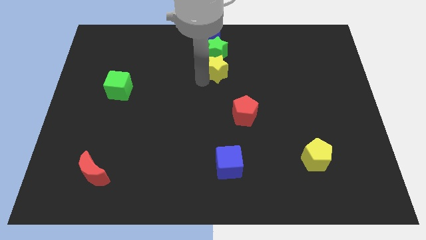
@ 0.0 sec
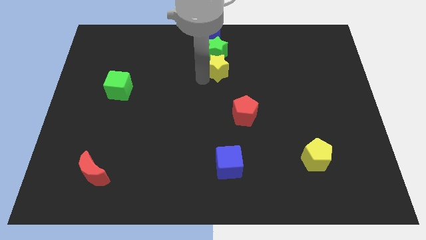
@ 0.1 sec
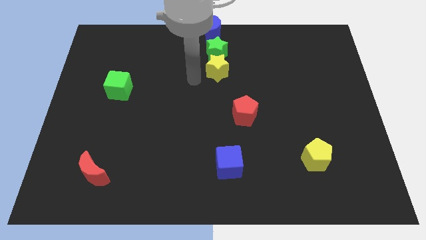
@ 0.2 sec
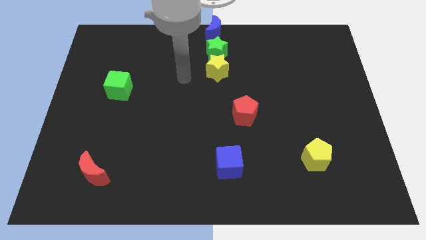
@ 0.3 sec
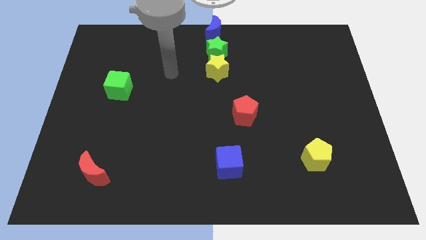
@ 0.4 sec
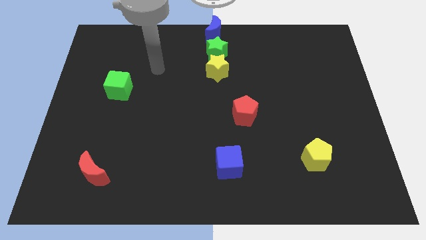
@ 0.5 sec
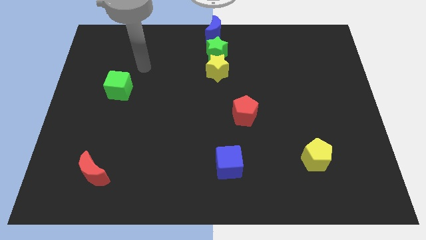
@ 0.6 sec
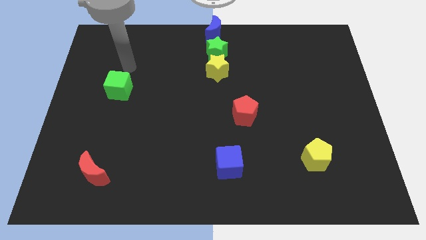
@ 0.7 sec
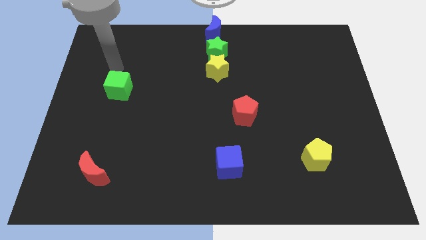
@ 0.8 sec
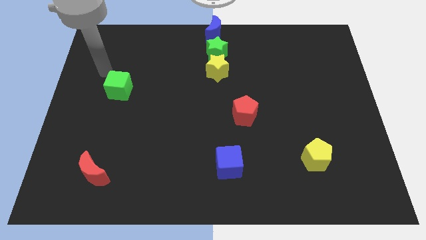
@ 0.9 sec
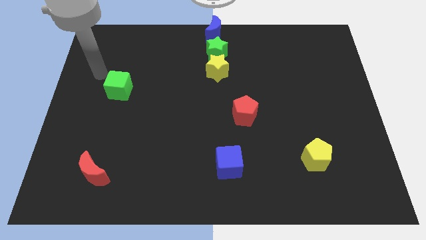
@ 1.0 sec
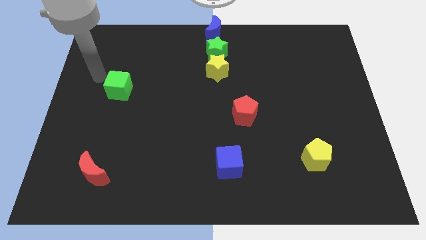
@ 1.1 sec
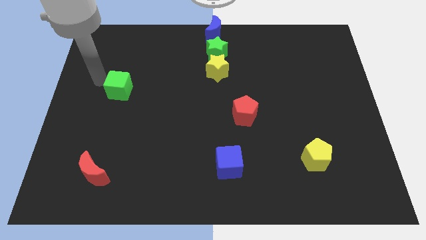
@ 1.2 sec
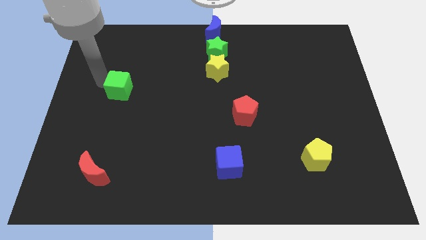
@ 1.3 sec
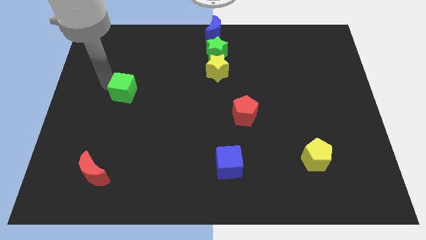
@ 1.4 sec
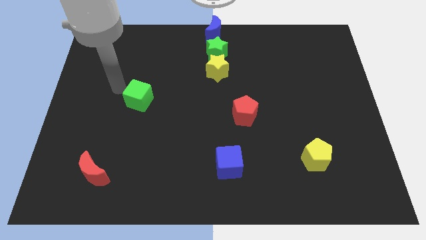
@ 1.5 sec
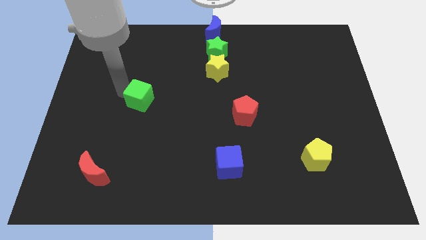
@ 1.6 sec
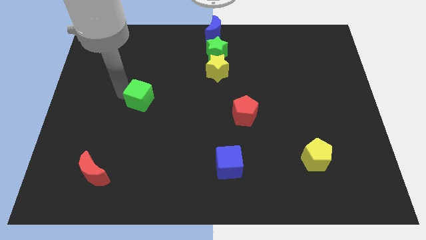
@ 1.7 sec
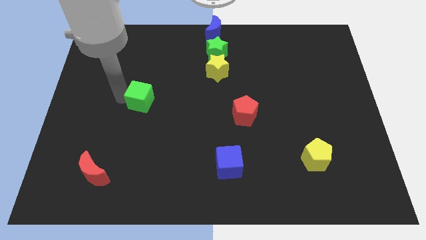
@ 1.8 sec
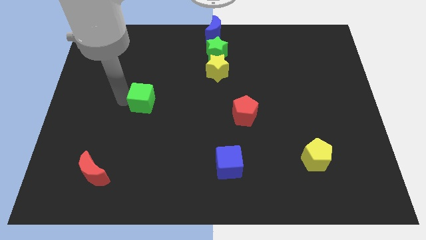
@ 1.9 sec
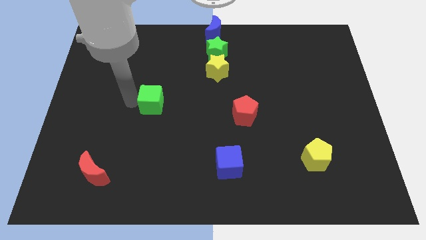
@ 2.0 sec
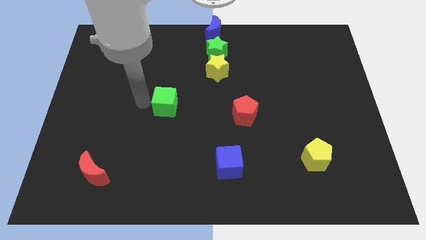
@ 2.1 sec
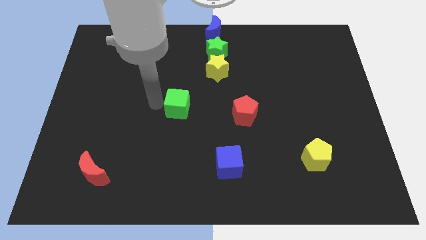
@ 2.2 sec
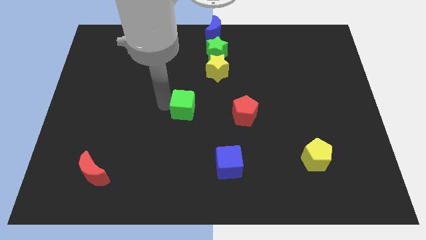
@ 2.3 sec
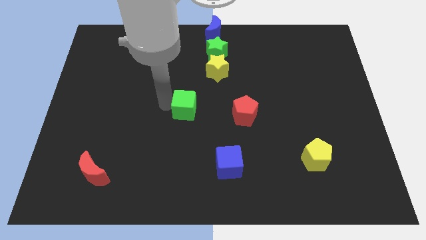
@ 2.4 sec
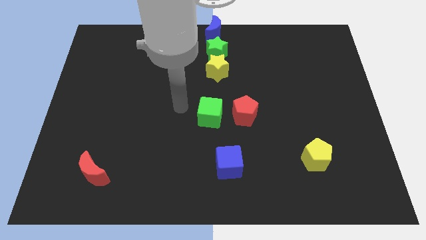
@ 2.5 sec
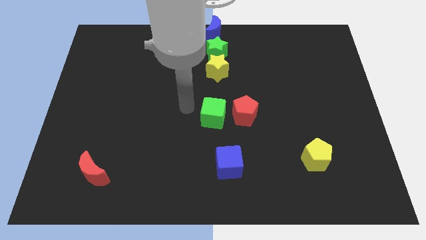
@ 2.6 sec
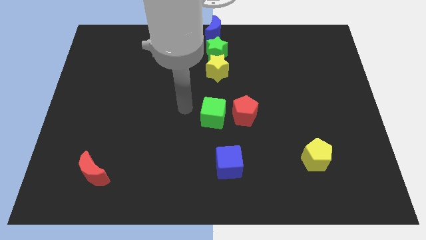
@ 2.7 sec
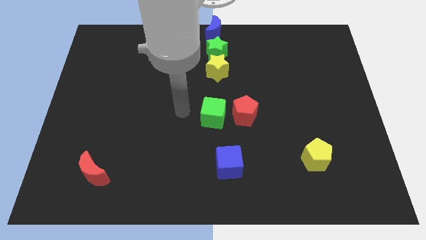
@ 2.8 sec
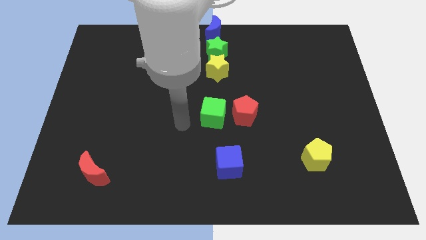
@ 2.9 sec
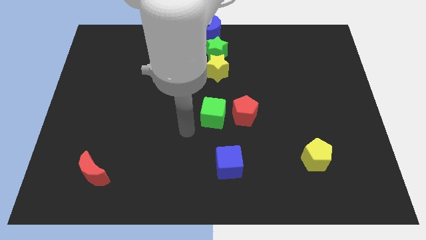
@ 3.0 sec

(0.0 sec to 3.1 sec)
slide the green cube left to the red pentagon

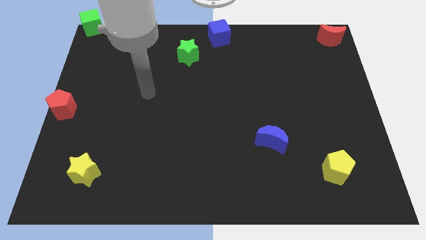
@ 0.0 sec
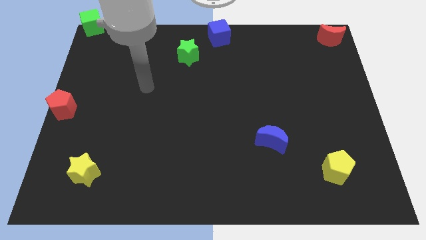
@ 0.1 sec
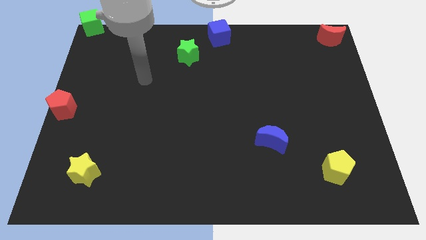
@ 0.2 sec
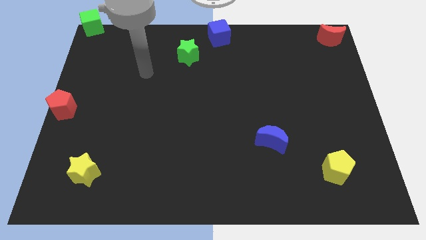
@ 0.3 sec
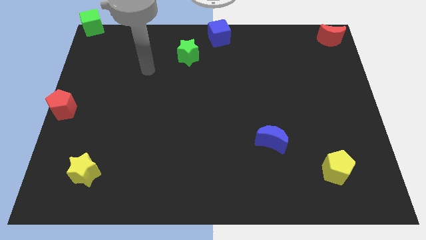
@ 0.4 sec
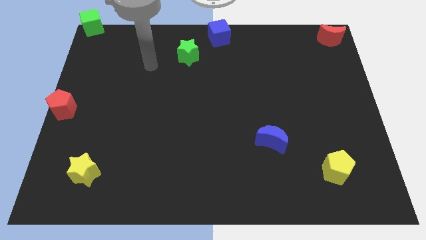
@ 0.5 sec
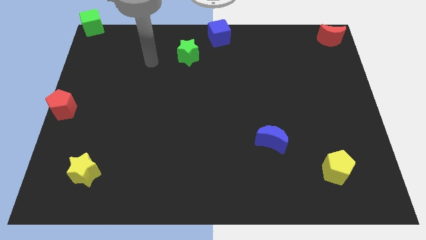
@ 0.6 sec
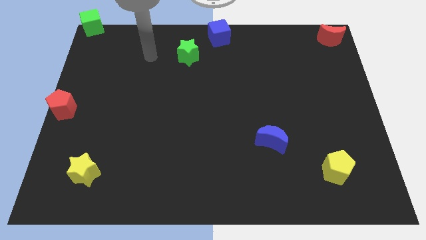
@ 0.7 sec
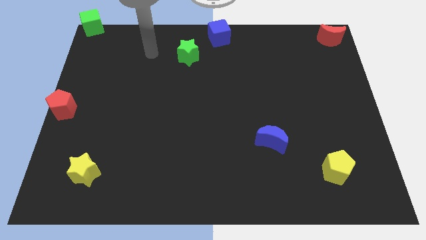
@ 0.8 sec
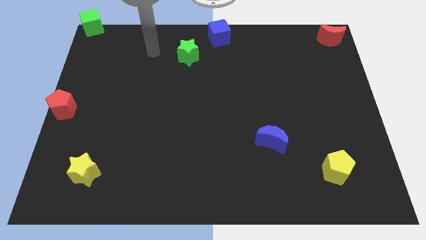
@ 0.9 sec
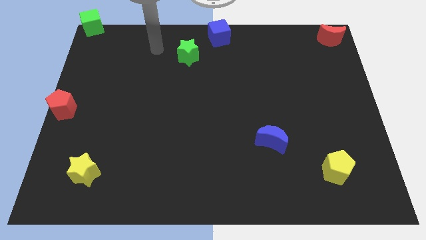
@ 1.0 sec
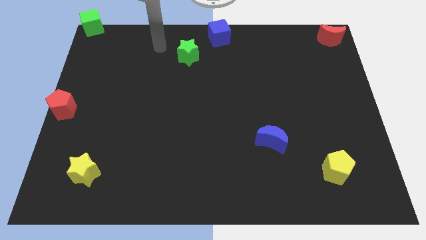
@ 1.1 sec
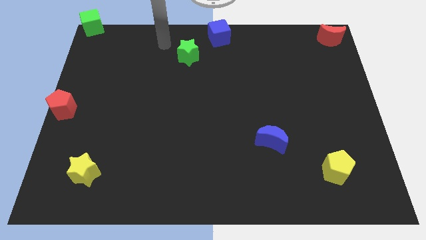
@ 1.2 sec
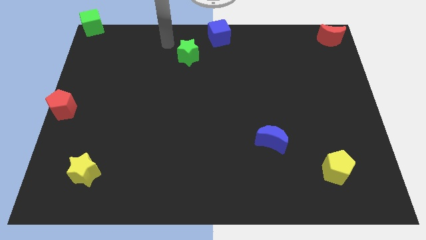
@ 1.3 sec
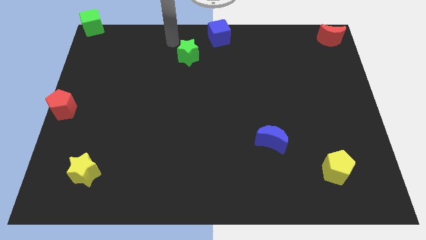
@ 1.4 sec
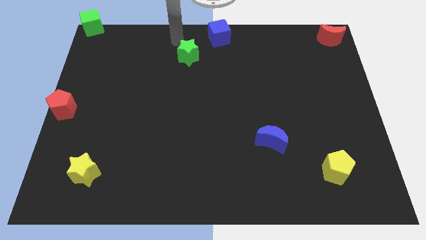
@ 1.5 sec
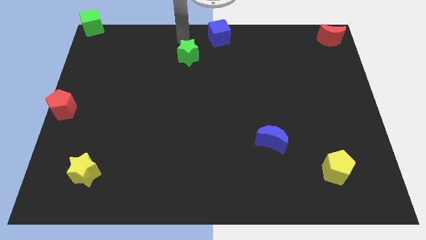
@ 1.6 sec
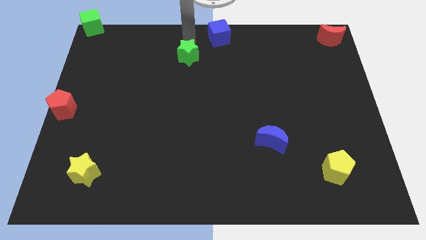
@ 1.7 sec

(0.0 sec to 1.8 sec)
point your arm at the top side of the green star

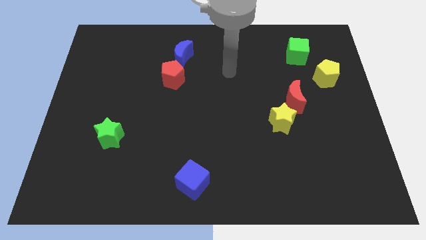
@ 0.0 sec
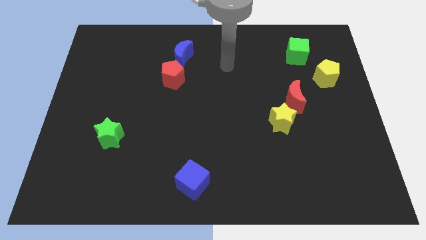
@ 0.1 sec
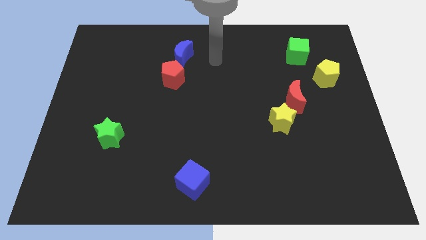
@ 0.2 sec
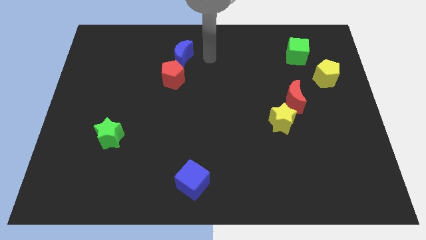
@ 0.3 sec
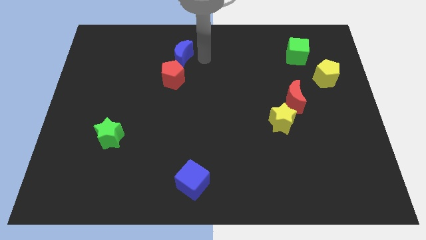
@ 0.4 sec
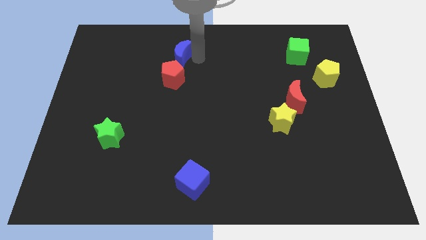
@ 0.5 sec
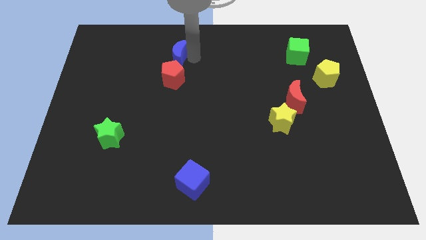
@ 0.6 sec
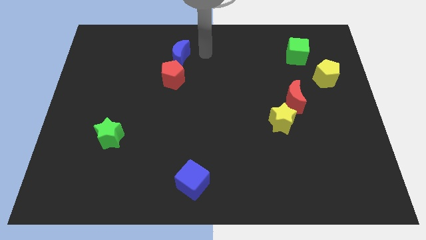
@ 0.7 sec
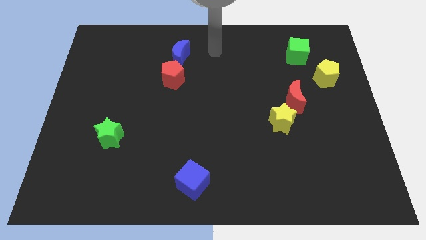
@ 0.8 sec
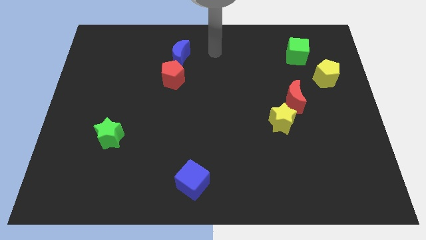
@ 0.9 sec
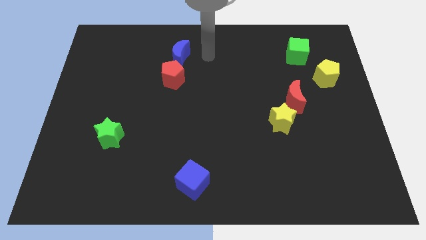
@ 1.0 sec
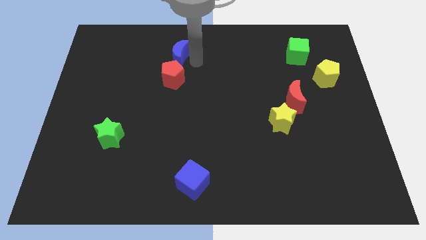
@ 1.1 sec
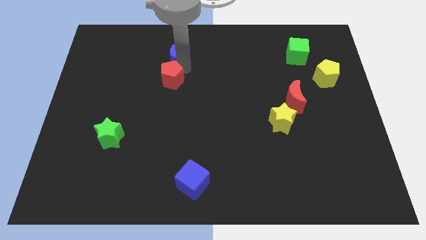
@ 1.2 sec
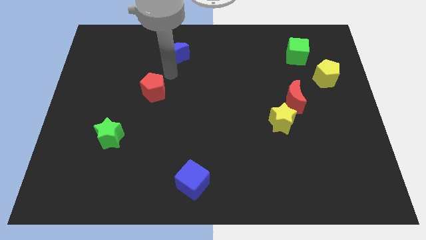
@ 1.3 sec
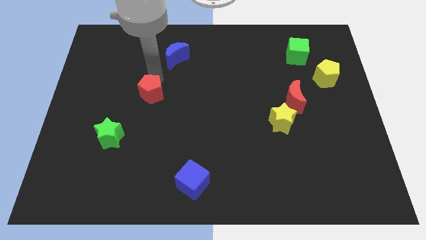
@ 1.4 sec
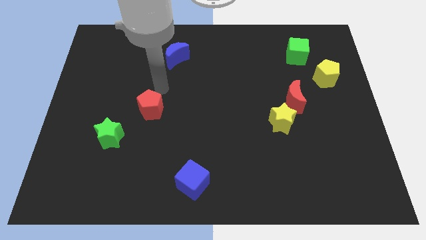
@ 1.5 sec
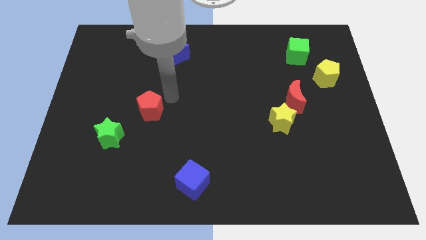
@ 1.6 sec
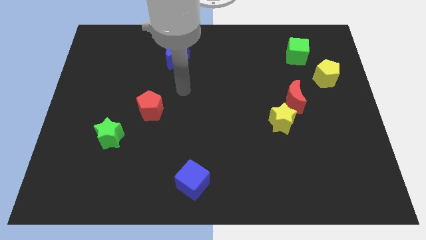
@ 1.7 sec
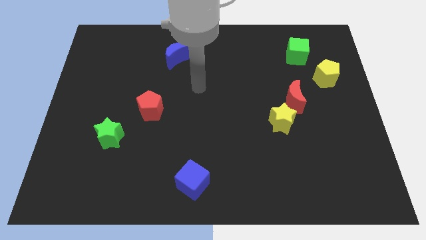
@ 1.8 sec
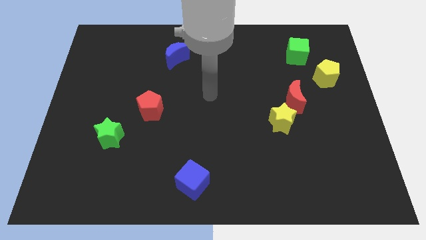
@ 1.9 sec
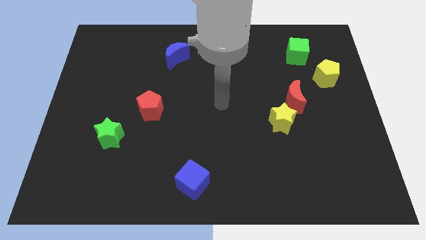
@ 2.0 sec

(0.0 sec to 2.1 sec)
move red pentagon middle of the board

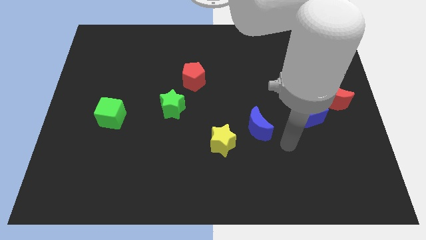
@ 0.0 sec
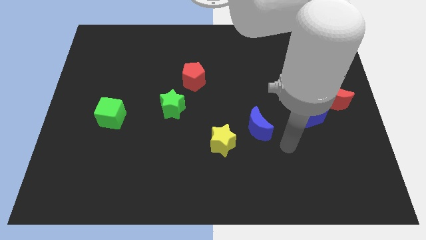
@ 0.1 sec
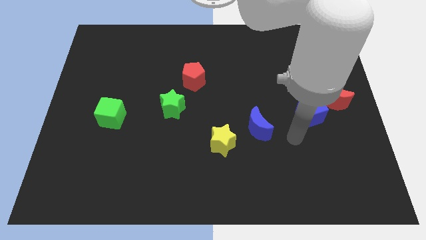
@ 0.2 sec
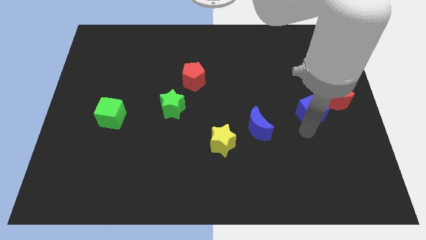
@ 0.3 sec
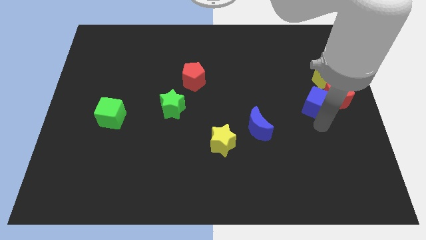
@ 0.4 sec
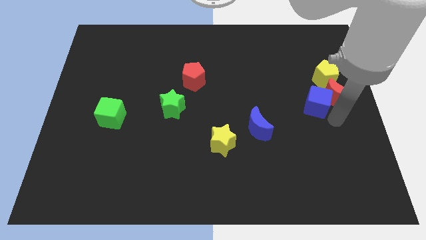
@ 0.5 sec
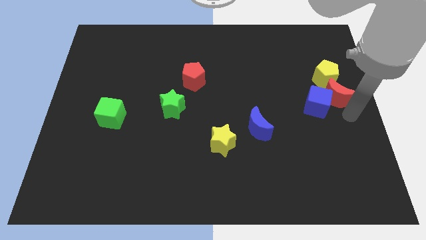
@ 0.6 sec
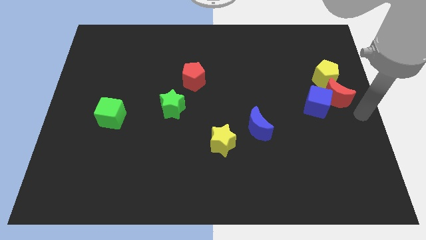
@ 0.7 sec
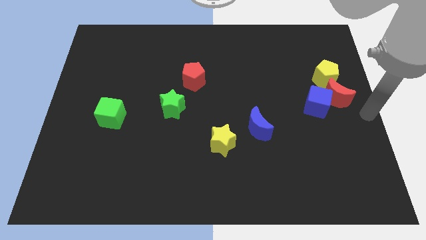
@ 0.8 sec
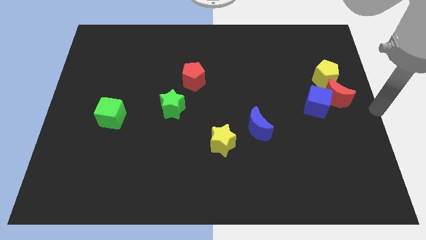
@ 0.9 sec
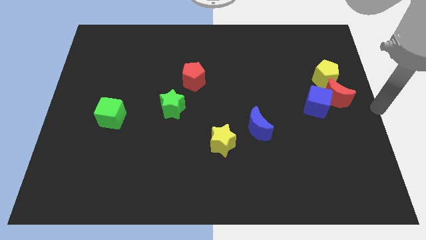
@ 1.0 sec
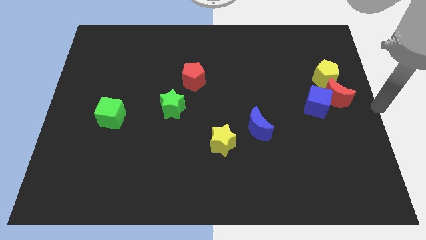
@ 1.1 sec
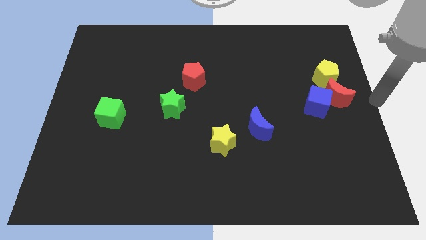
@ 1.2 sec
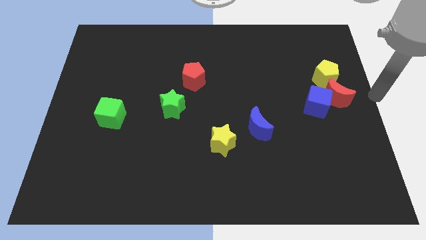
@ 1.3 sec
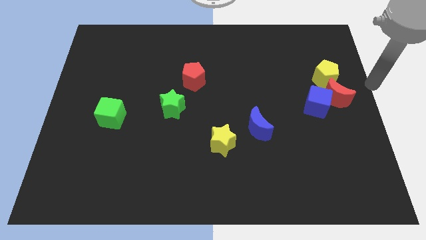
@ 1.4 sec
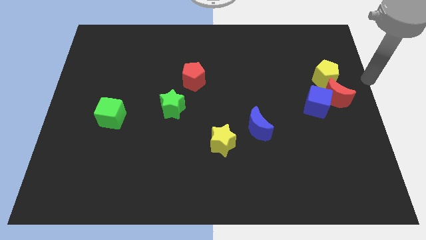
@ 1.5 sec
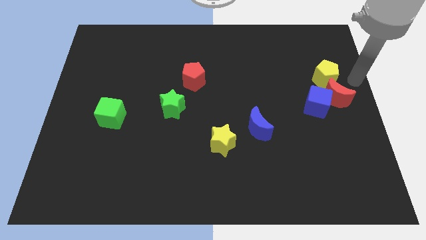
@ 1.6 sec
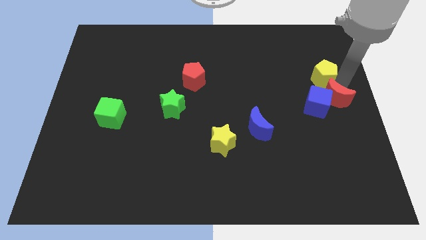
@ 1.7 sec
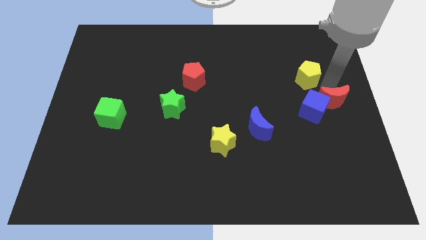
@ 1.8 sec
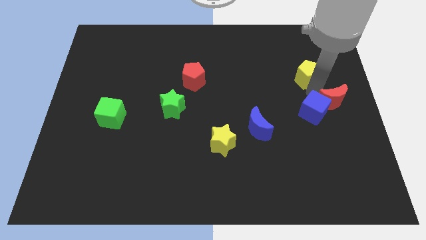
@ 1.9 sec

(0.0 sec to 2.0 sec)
push blue cube into red moon
